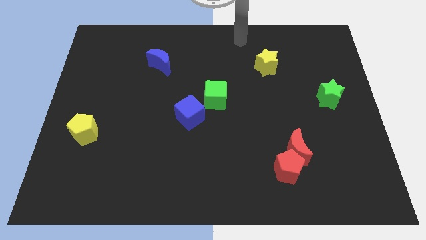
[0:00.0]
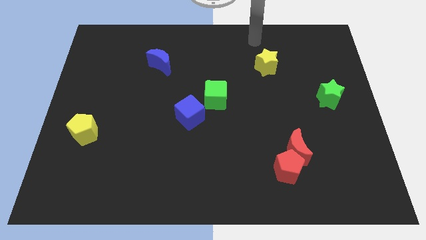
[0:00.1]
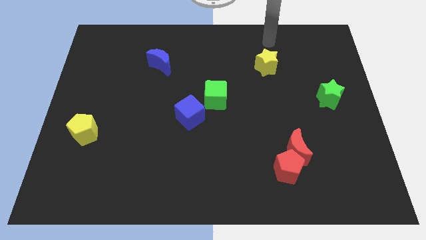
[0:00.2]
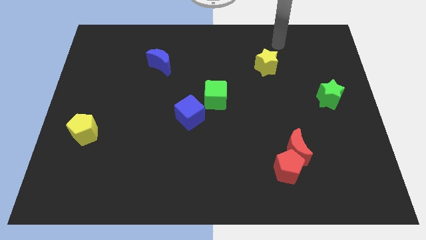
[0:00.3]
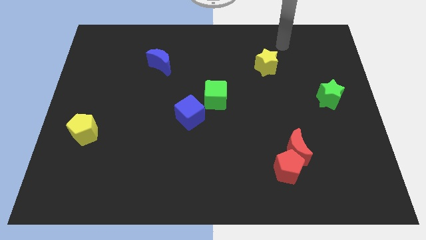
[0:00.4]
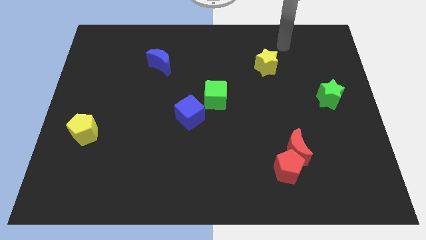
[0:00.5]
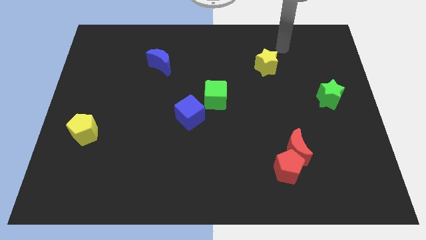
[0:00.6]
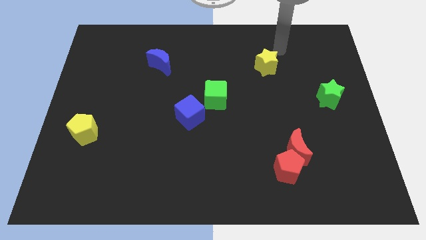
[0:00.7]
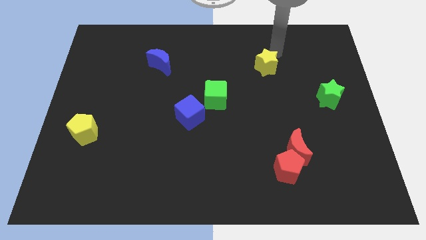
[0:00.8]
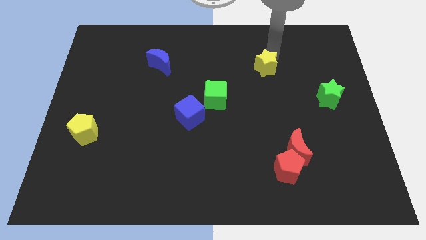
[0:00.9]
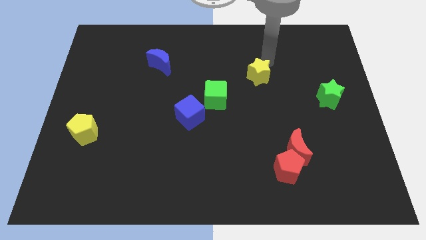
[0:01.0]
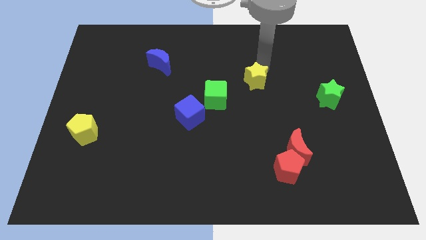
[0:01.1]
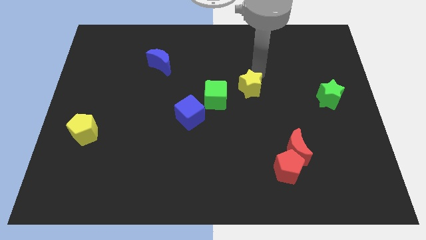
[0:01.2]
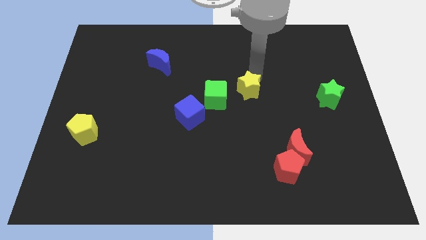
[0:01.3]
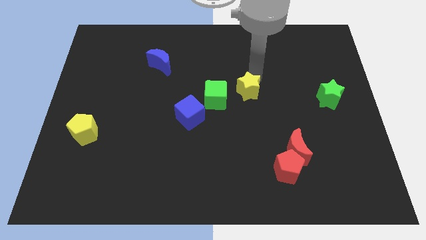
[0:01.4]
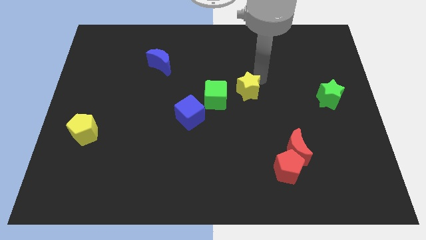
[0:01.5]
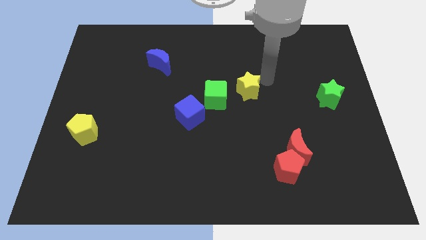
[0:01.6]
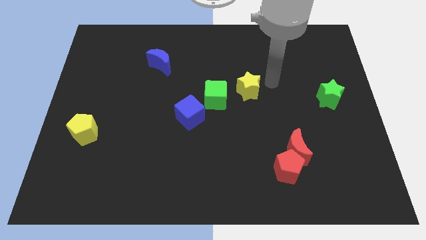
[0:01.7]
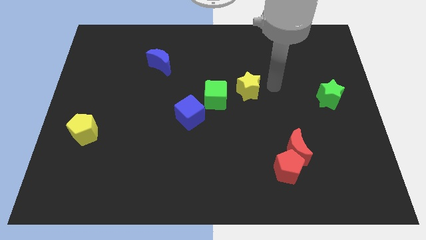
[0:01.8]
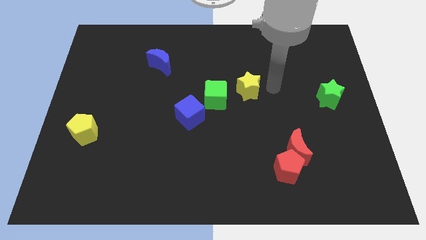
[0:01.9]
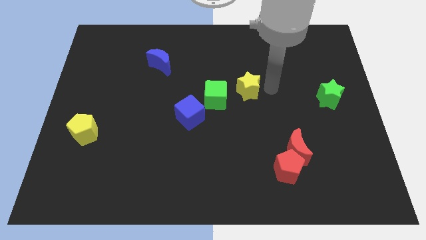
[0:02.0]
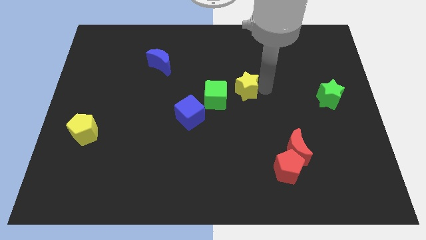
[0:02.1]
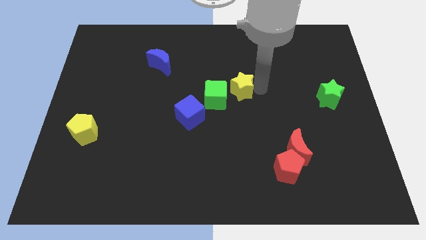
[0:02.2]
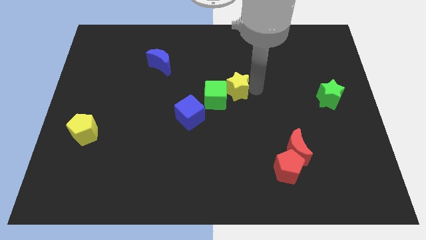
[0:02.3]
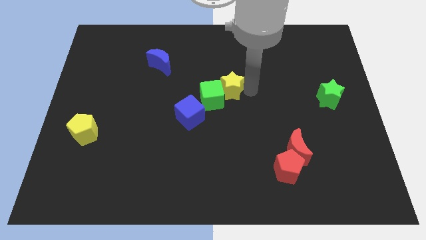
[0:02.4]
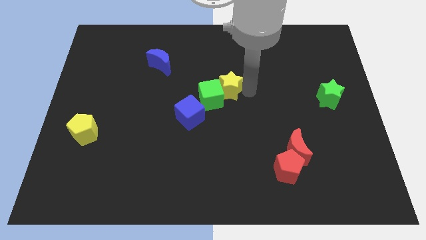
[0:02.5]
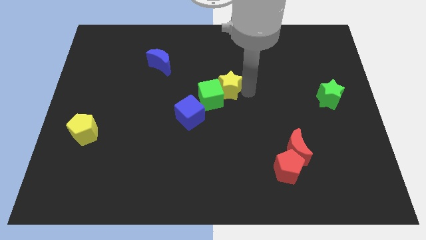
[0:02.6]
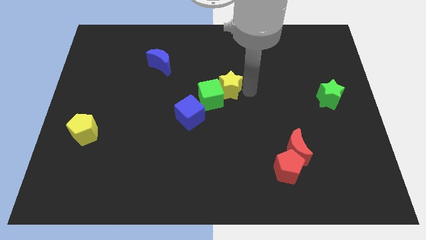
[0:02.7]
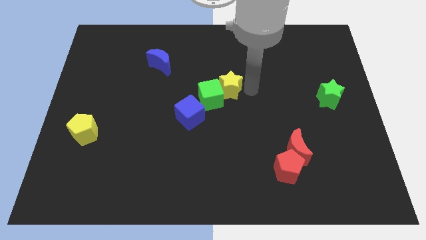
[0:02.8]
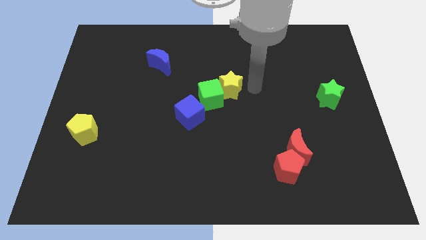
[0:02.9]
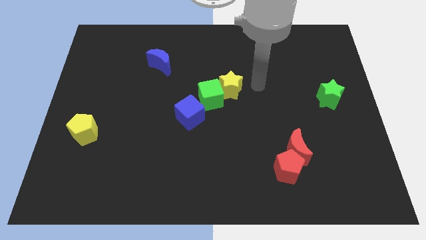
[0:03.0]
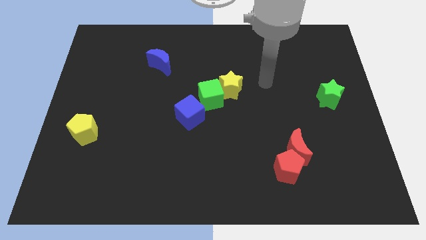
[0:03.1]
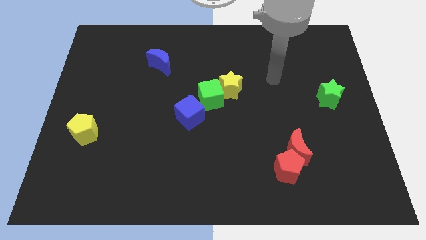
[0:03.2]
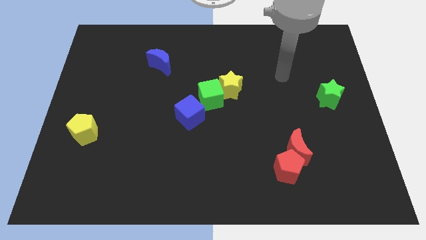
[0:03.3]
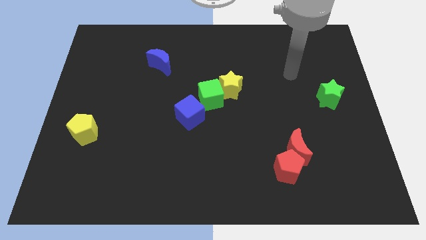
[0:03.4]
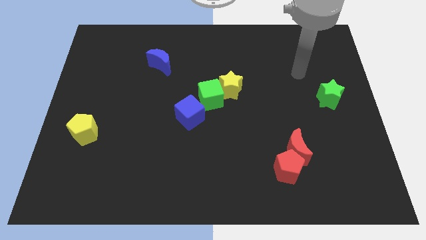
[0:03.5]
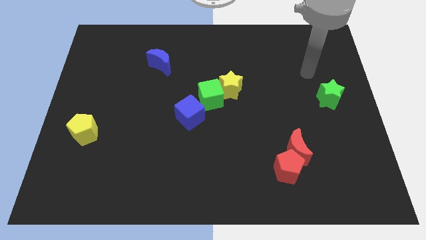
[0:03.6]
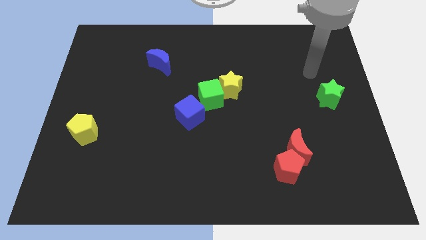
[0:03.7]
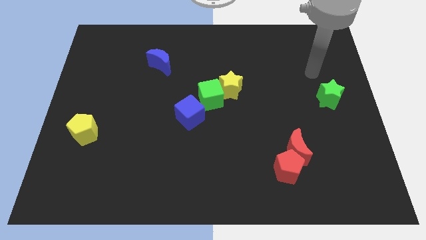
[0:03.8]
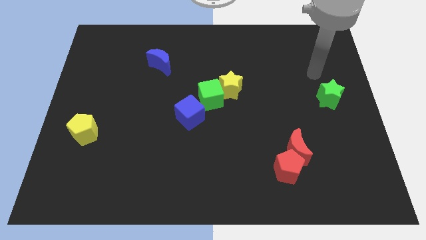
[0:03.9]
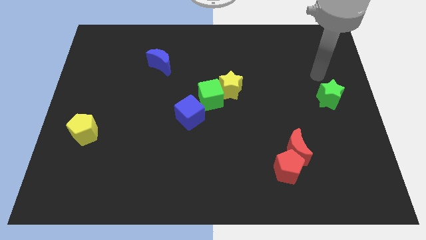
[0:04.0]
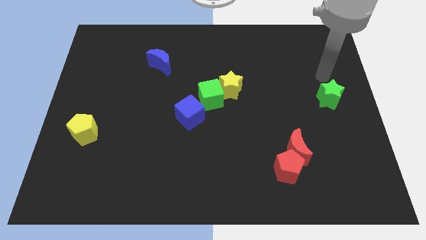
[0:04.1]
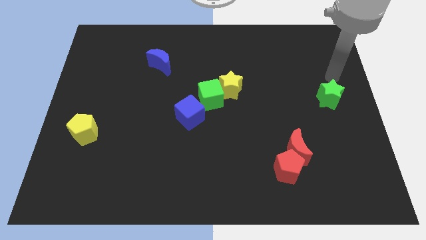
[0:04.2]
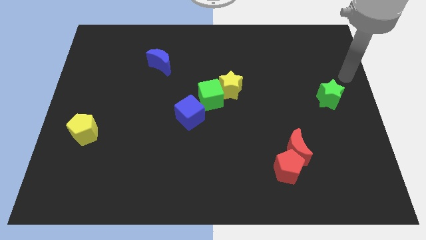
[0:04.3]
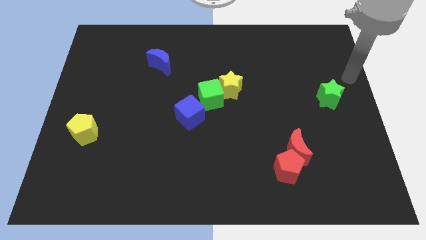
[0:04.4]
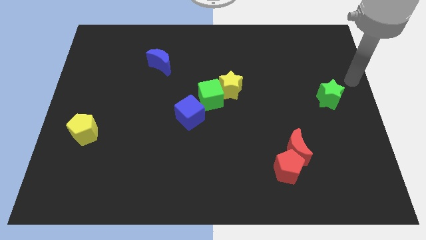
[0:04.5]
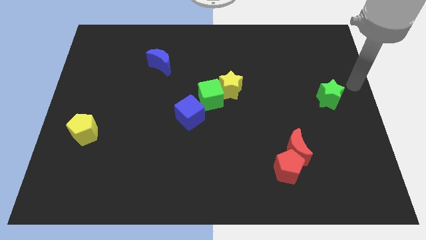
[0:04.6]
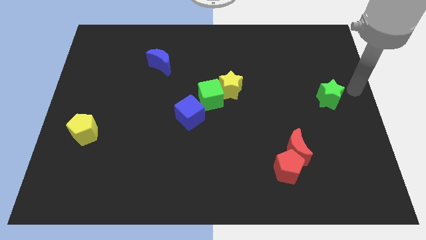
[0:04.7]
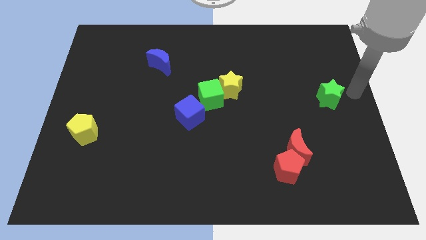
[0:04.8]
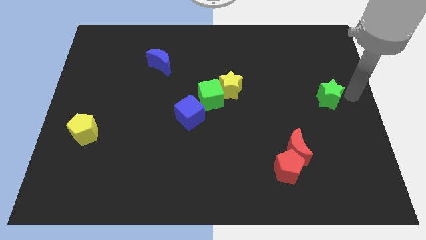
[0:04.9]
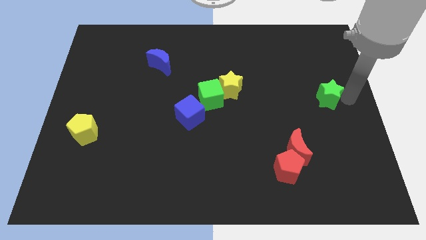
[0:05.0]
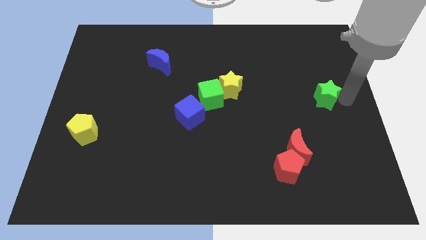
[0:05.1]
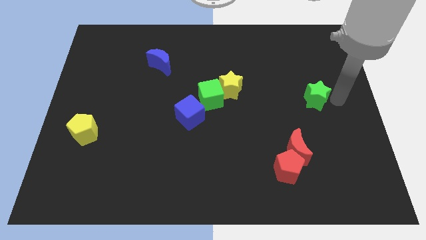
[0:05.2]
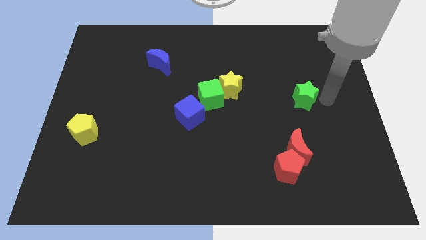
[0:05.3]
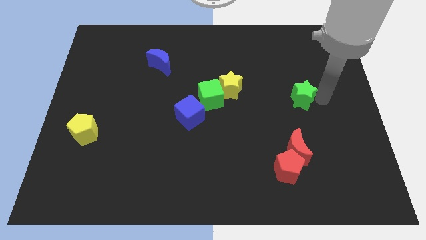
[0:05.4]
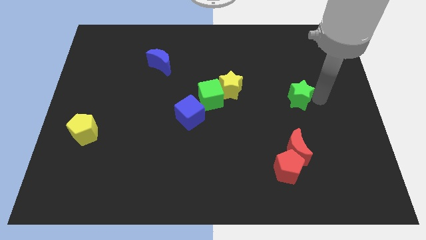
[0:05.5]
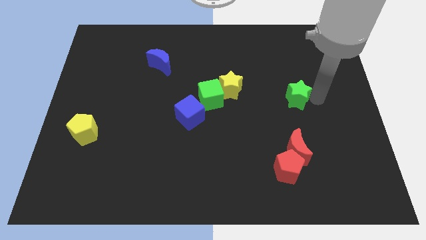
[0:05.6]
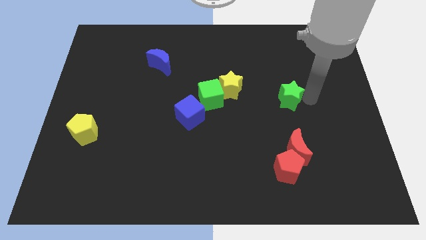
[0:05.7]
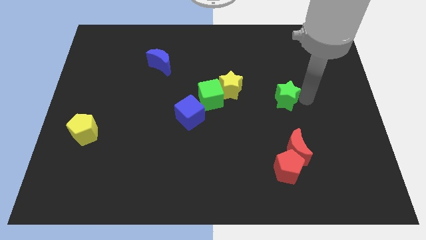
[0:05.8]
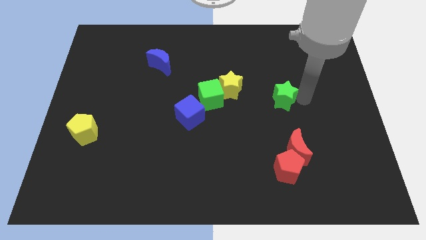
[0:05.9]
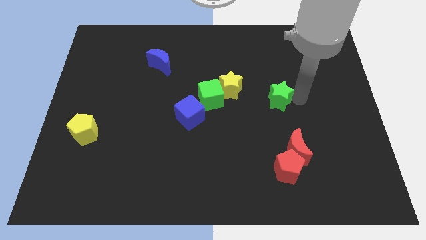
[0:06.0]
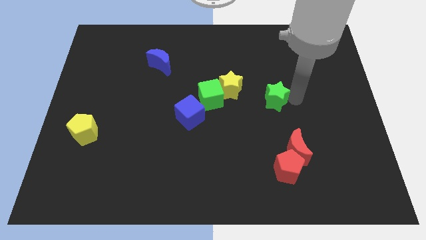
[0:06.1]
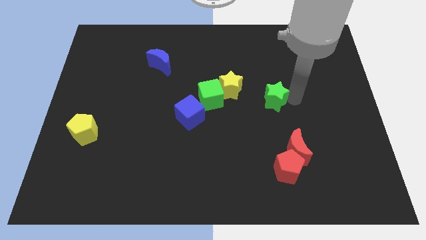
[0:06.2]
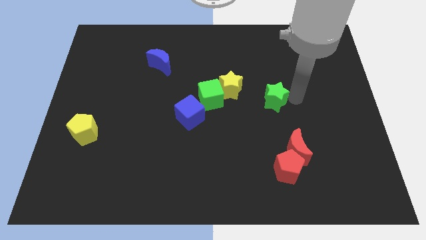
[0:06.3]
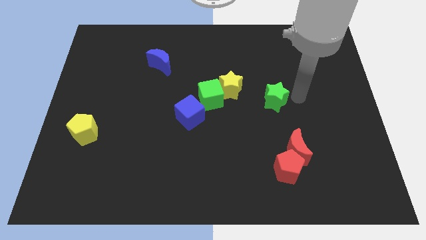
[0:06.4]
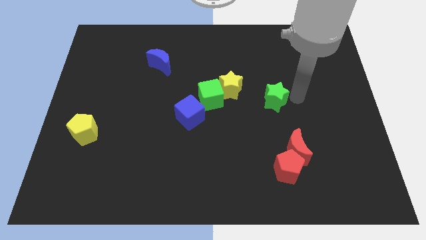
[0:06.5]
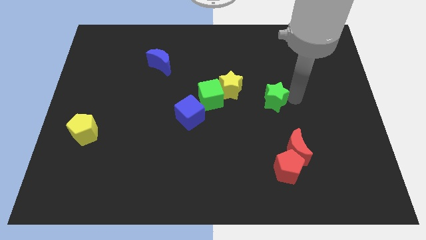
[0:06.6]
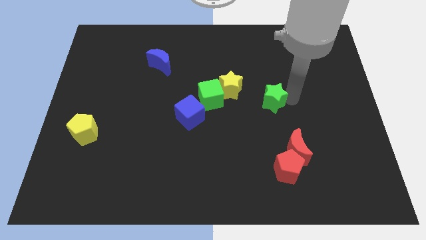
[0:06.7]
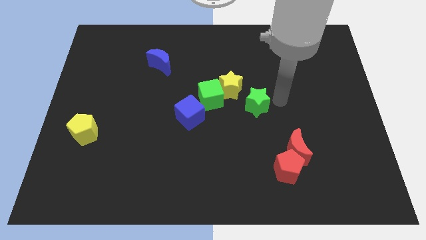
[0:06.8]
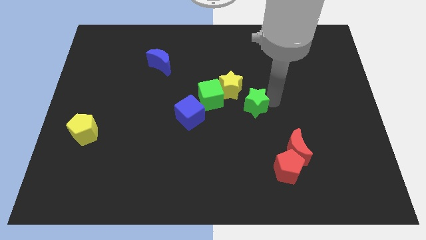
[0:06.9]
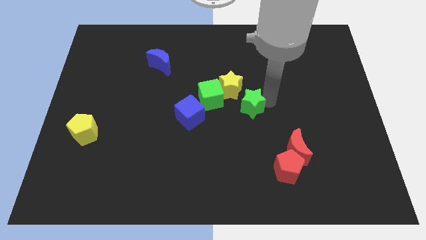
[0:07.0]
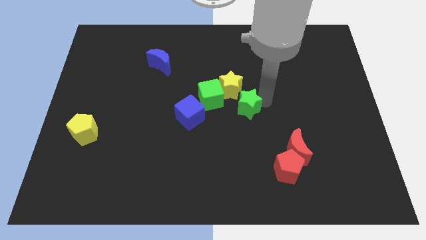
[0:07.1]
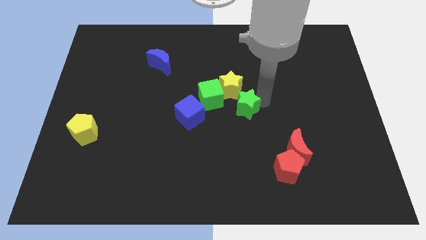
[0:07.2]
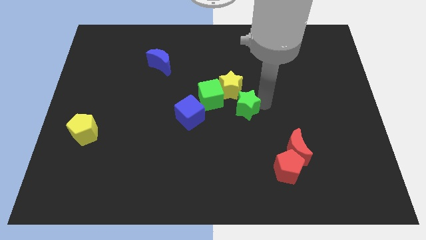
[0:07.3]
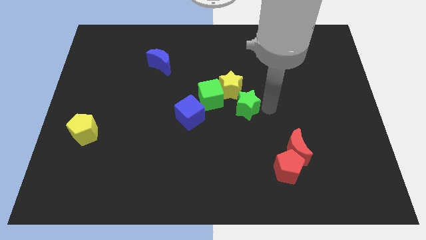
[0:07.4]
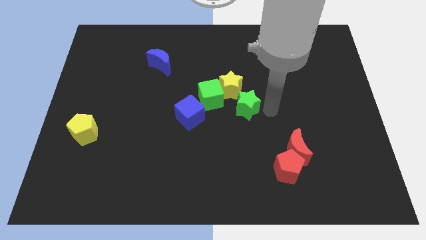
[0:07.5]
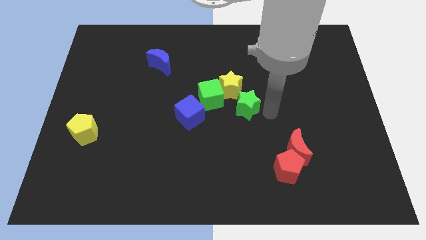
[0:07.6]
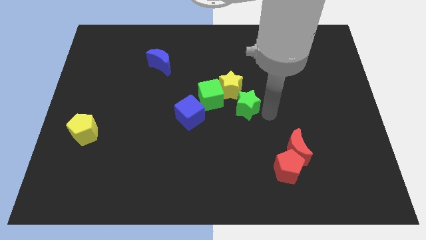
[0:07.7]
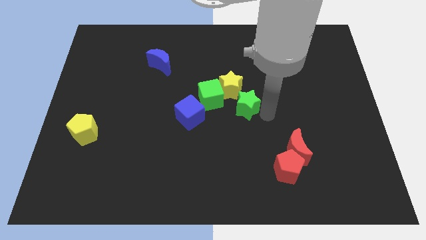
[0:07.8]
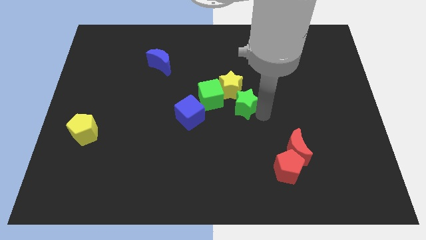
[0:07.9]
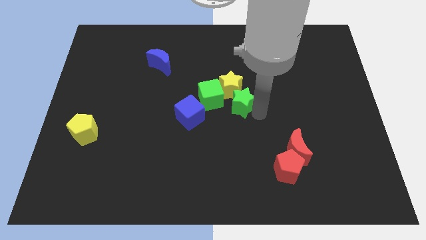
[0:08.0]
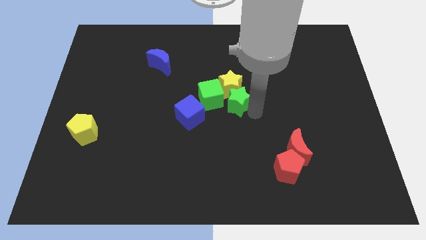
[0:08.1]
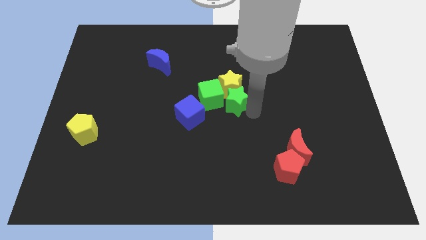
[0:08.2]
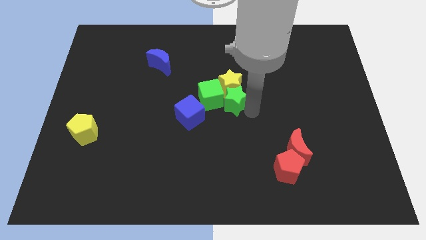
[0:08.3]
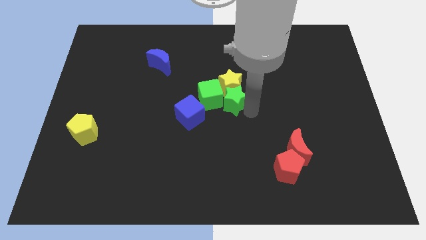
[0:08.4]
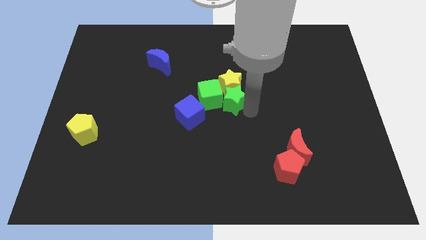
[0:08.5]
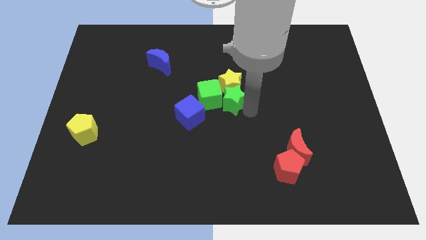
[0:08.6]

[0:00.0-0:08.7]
group up the green blocks and yellow star together at the center of the board

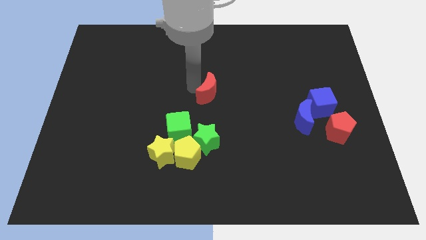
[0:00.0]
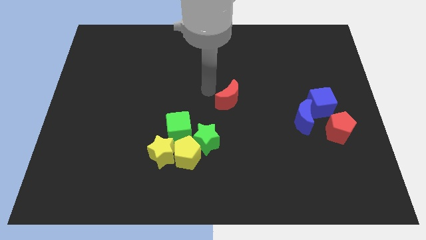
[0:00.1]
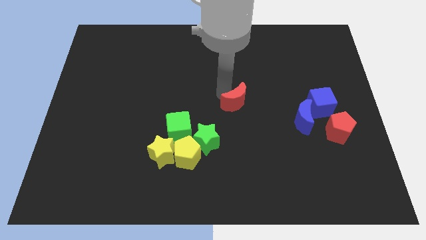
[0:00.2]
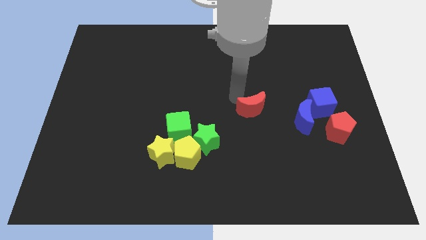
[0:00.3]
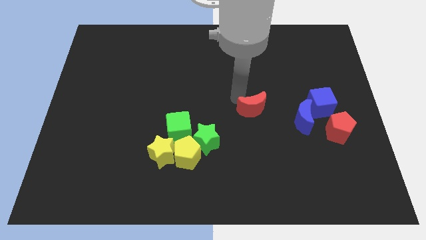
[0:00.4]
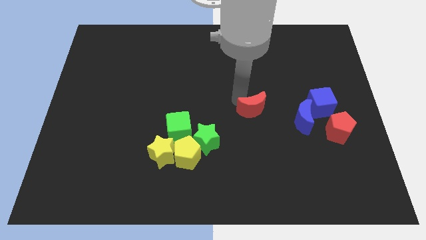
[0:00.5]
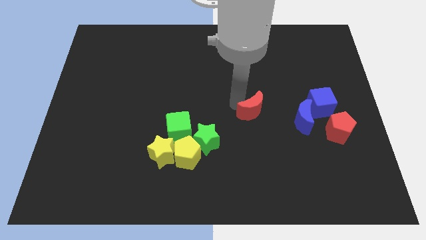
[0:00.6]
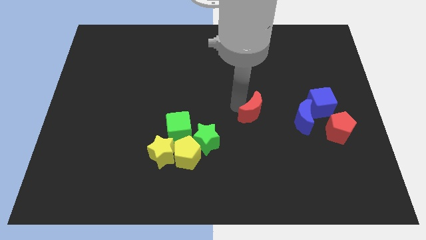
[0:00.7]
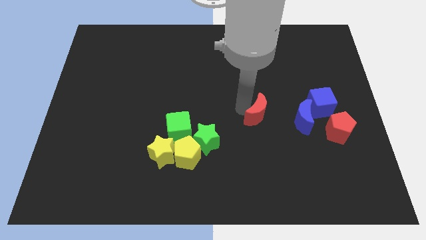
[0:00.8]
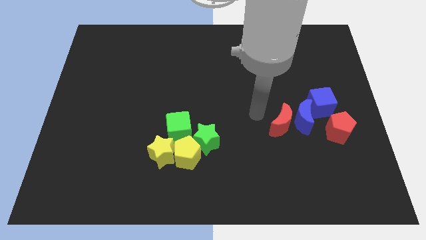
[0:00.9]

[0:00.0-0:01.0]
push the red crescent towards the red pentagon
